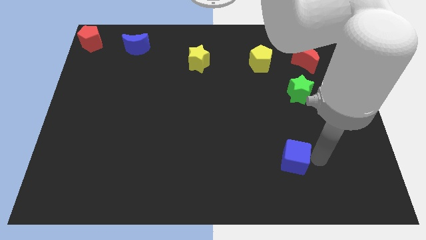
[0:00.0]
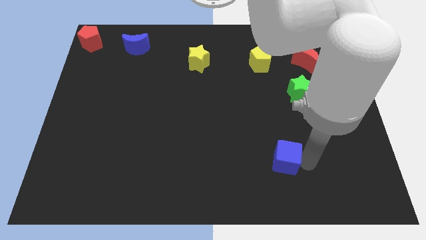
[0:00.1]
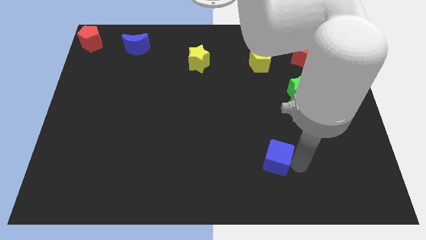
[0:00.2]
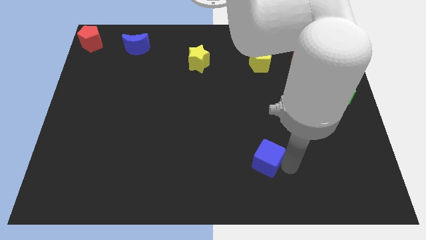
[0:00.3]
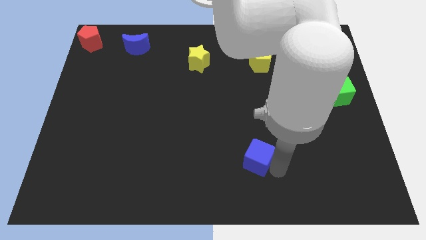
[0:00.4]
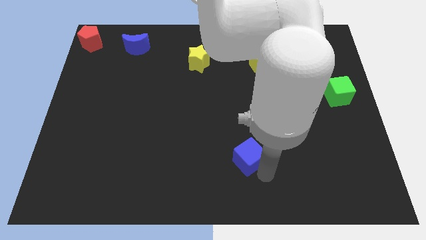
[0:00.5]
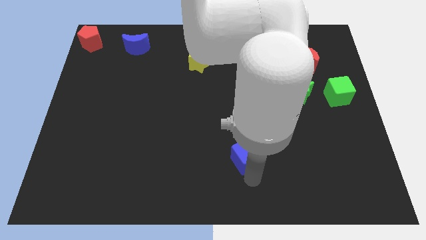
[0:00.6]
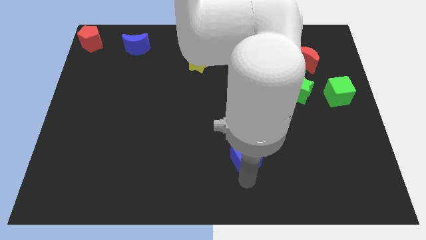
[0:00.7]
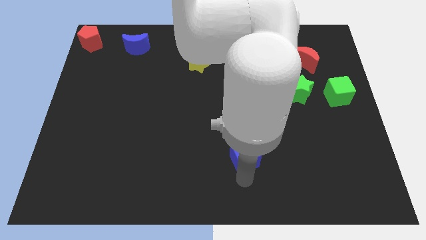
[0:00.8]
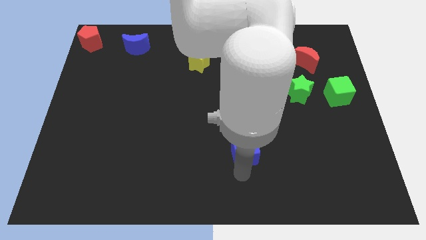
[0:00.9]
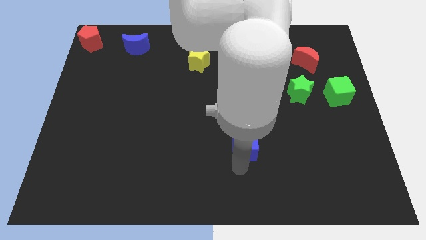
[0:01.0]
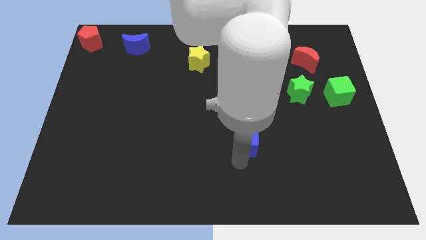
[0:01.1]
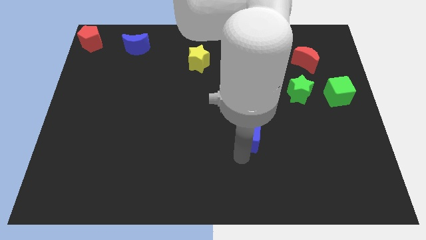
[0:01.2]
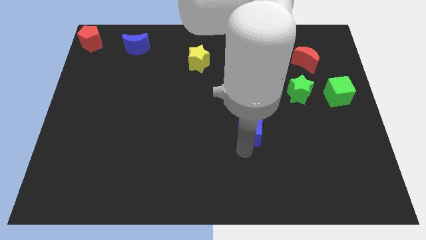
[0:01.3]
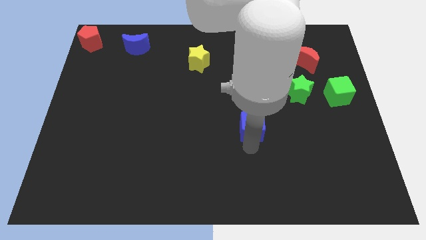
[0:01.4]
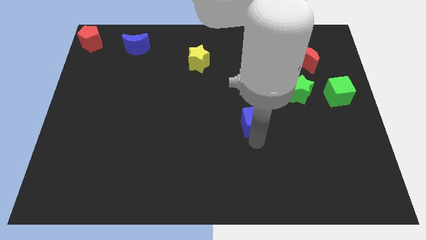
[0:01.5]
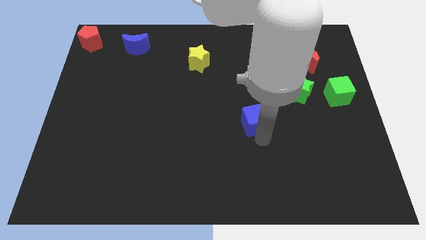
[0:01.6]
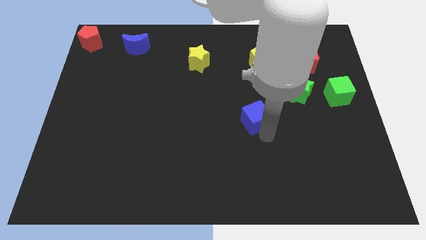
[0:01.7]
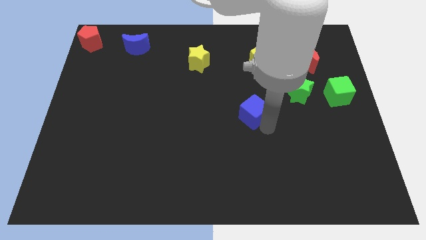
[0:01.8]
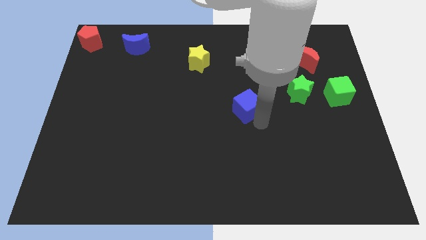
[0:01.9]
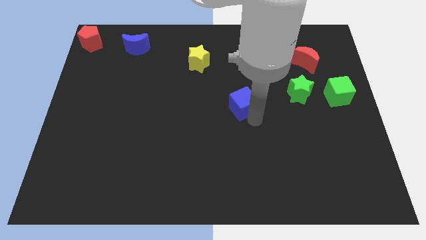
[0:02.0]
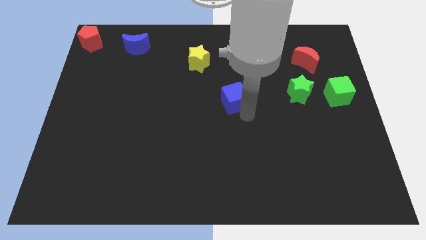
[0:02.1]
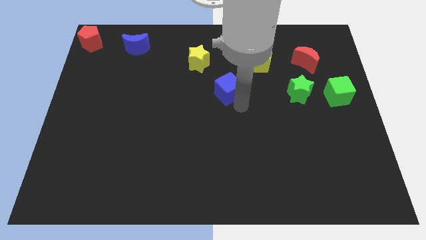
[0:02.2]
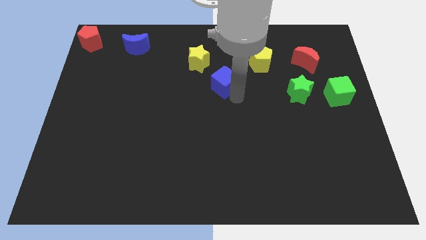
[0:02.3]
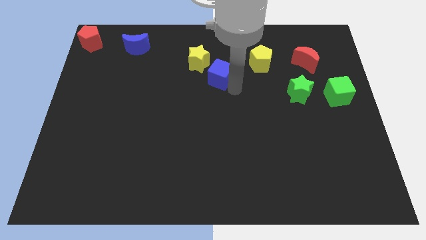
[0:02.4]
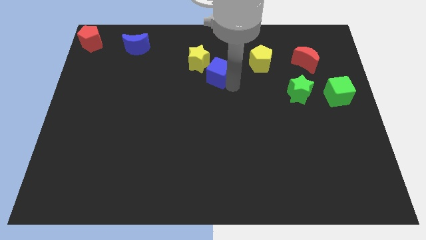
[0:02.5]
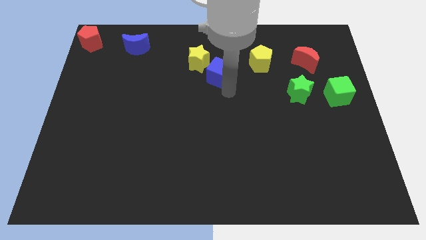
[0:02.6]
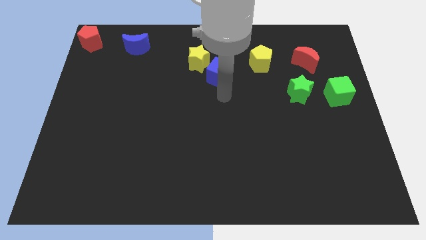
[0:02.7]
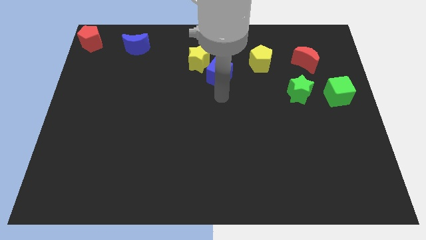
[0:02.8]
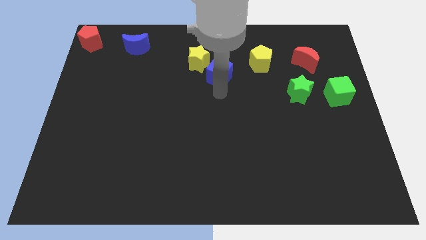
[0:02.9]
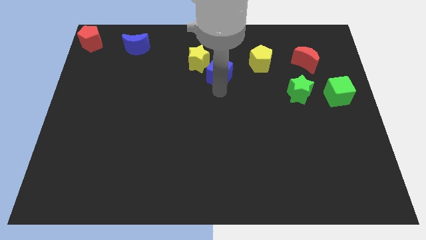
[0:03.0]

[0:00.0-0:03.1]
push blue cube towards yellow star

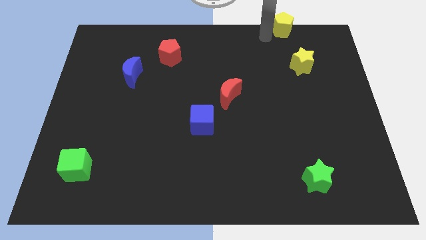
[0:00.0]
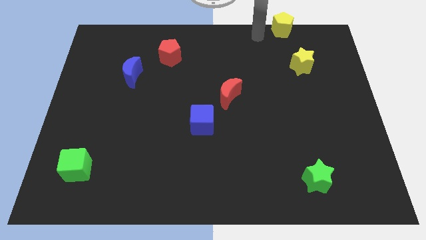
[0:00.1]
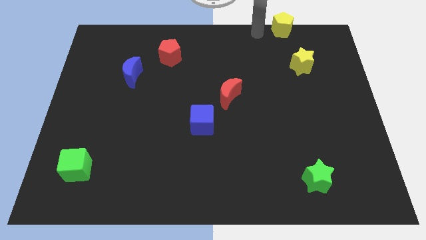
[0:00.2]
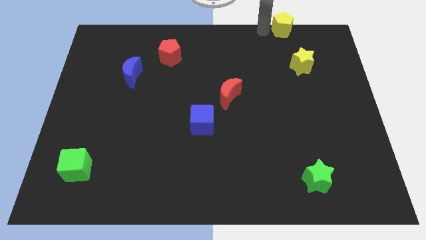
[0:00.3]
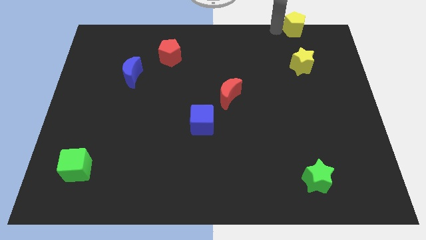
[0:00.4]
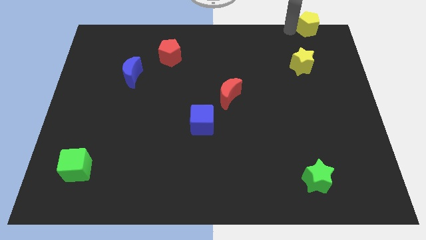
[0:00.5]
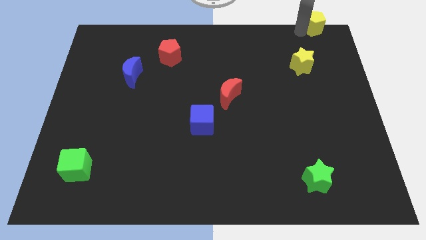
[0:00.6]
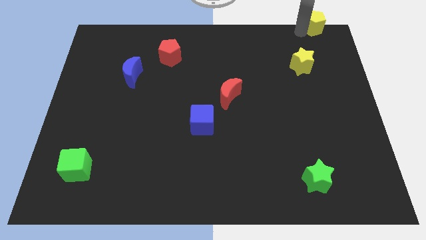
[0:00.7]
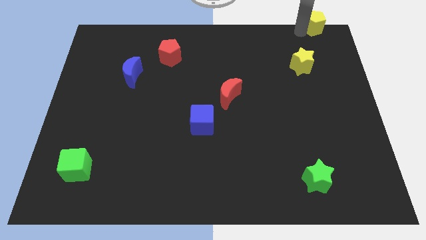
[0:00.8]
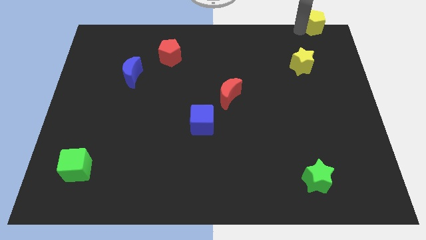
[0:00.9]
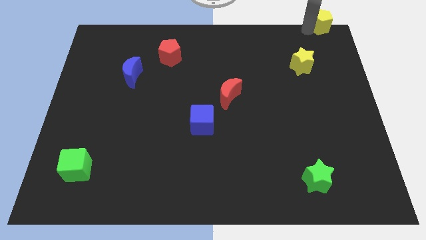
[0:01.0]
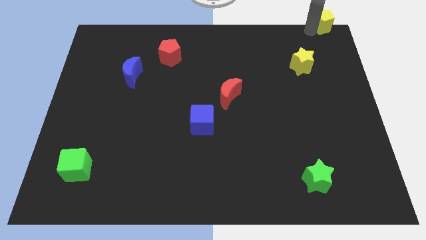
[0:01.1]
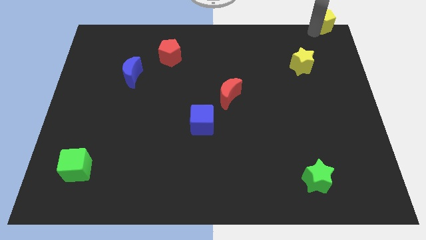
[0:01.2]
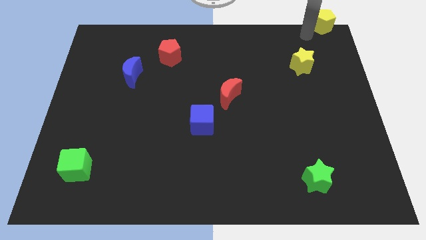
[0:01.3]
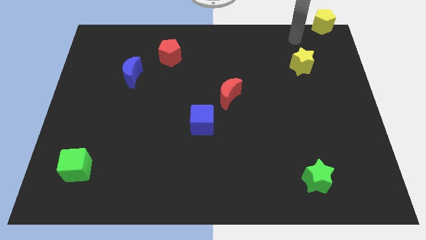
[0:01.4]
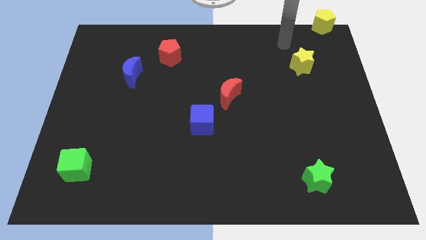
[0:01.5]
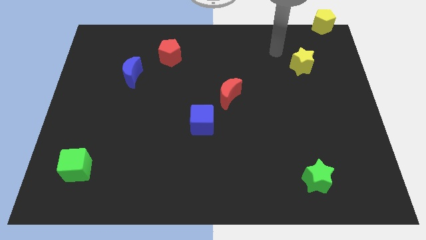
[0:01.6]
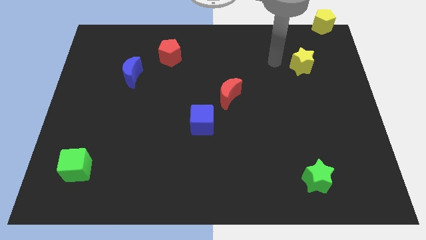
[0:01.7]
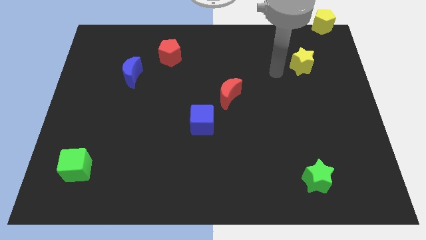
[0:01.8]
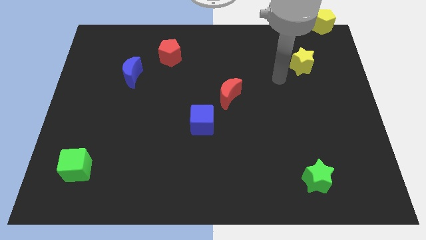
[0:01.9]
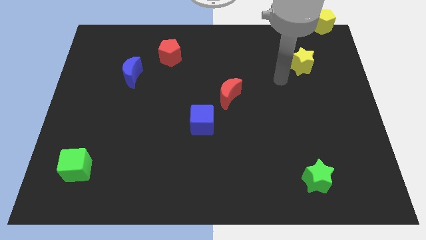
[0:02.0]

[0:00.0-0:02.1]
move the yellow pentagon to the top right corner of the board

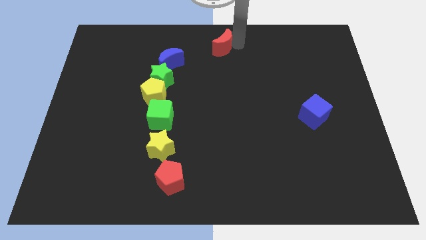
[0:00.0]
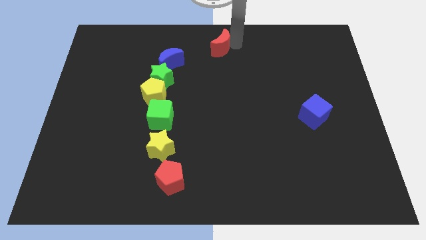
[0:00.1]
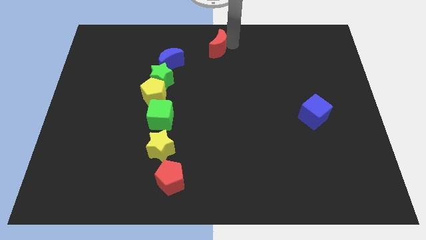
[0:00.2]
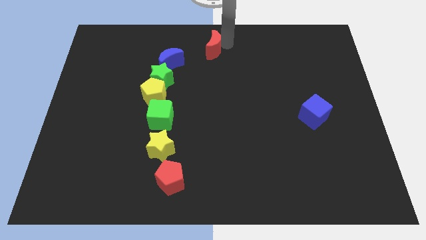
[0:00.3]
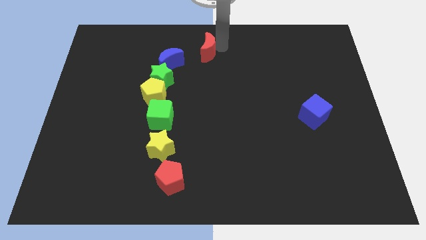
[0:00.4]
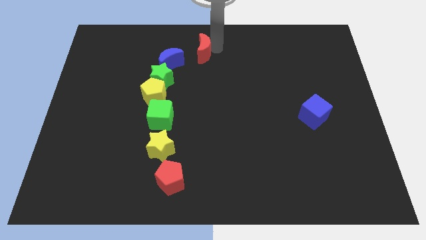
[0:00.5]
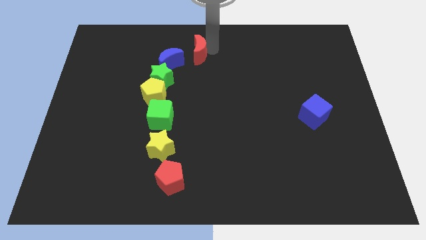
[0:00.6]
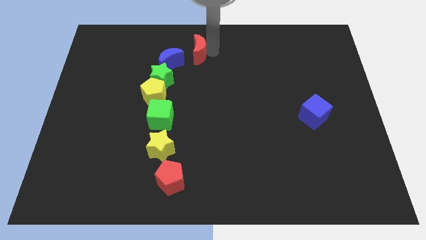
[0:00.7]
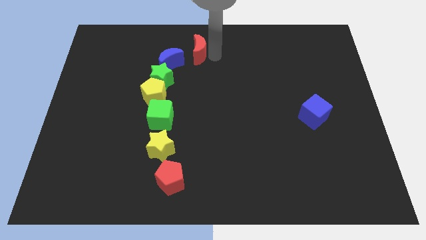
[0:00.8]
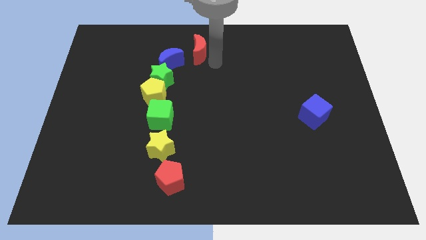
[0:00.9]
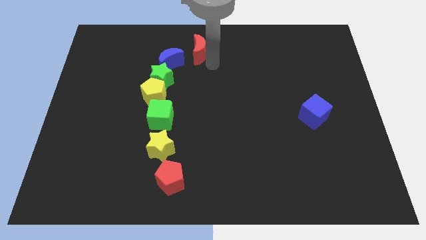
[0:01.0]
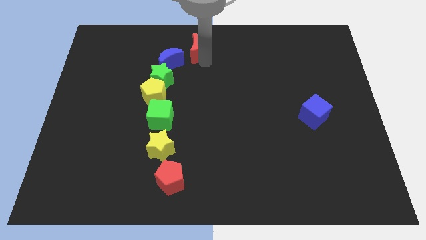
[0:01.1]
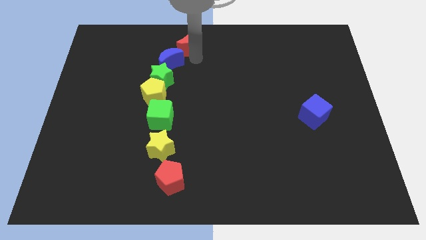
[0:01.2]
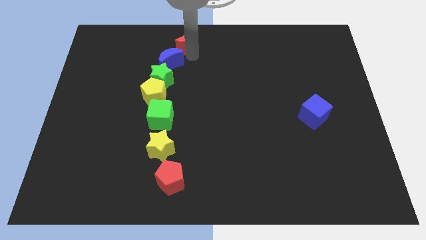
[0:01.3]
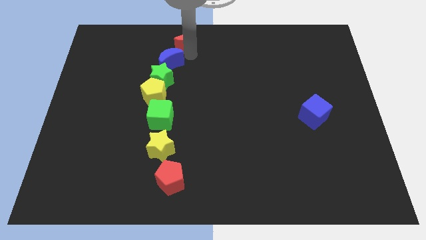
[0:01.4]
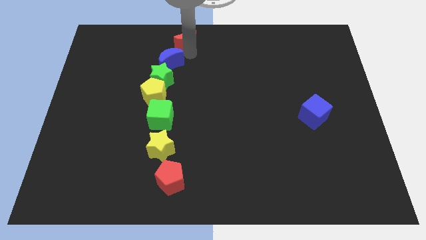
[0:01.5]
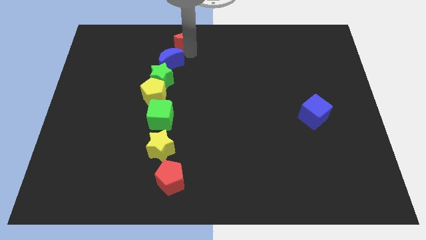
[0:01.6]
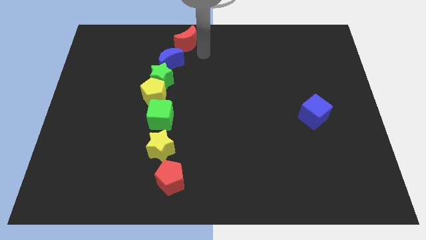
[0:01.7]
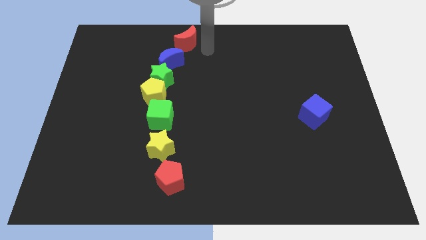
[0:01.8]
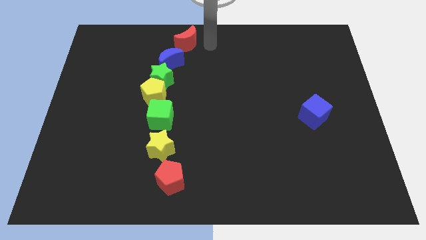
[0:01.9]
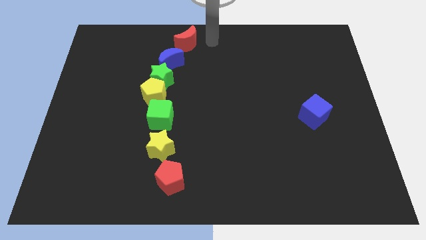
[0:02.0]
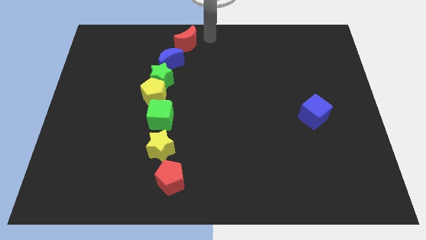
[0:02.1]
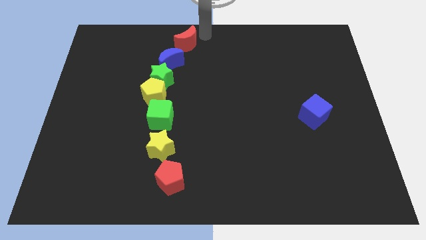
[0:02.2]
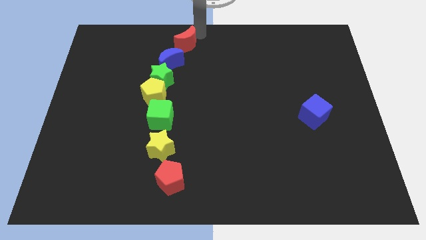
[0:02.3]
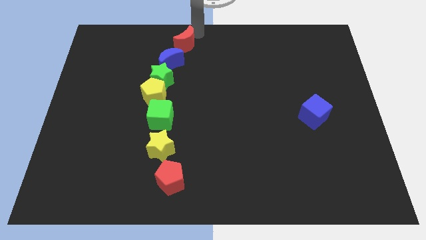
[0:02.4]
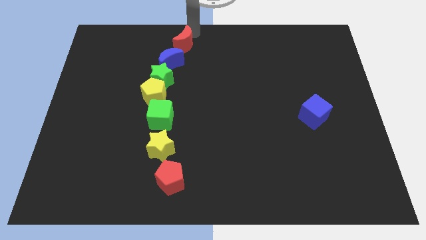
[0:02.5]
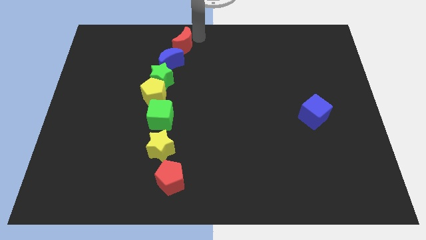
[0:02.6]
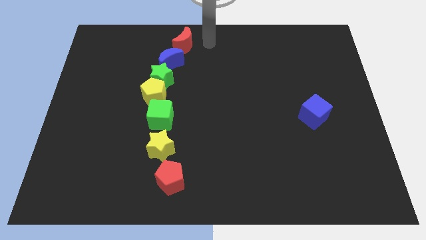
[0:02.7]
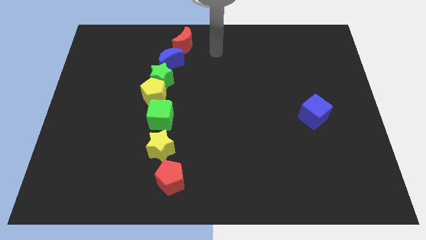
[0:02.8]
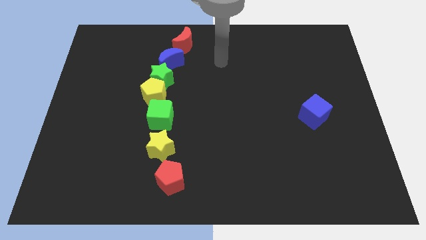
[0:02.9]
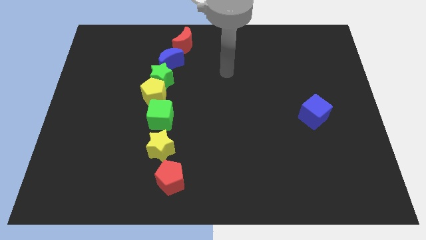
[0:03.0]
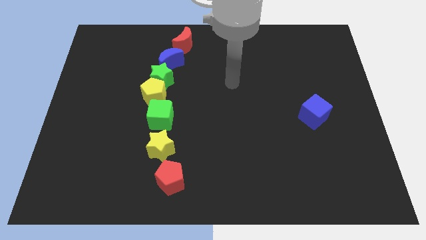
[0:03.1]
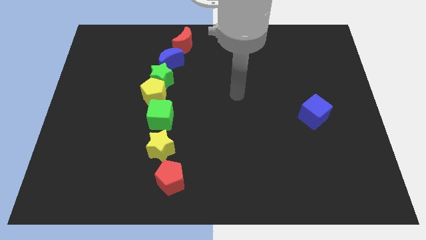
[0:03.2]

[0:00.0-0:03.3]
push the red crescent above the blue moon

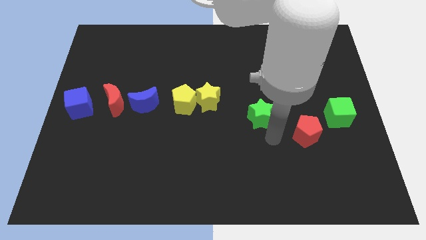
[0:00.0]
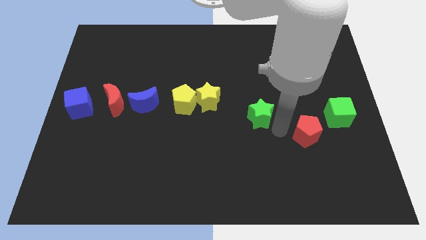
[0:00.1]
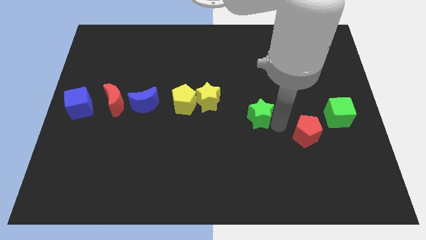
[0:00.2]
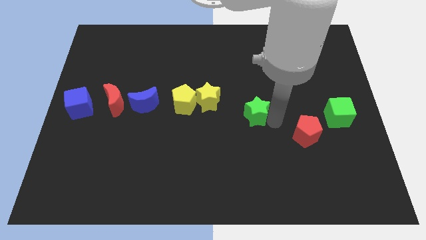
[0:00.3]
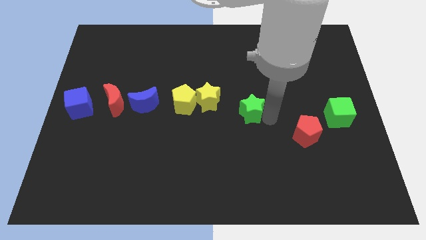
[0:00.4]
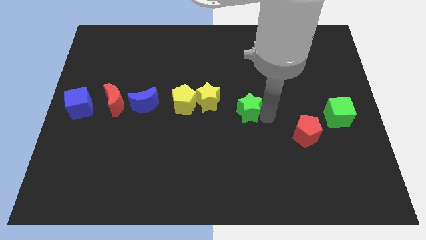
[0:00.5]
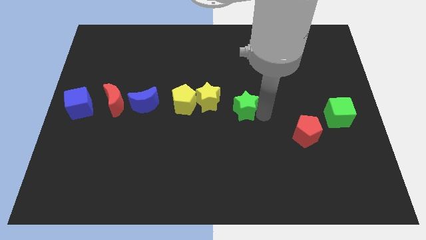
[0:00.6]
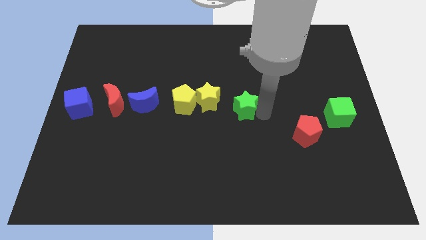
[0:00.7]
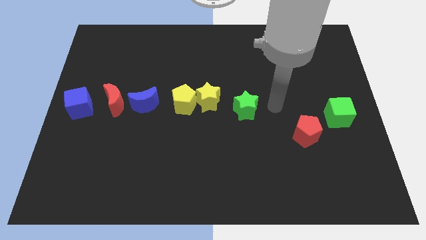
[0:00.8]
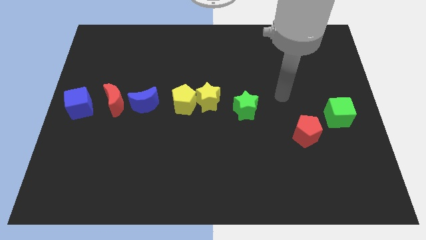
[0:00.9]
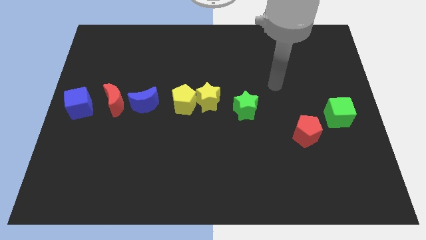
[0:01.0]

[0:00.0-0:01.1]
push the green star to the right of the yellow star
